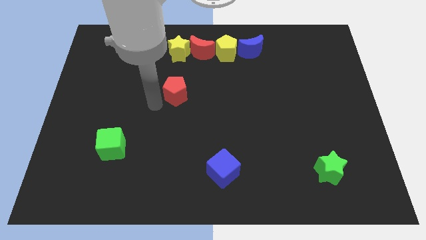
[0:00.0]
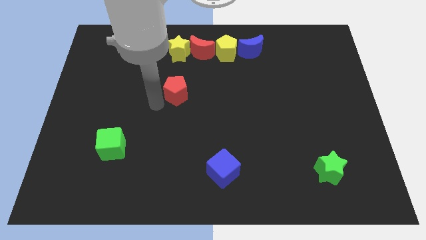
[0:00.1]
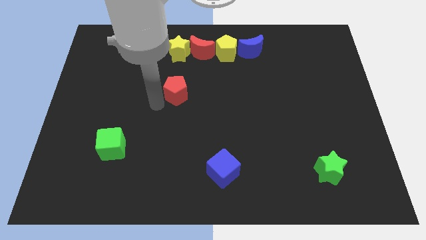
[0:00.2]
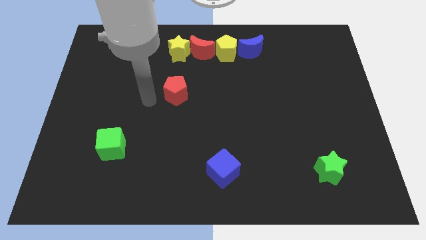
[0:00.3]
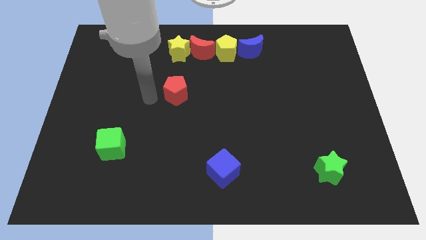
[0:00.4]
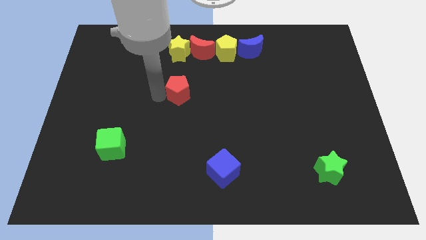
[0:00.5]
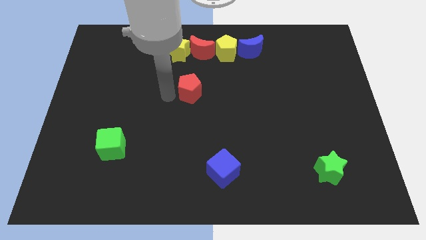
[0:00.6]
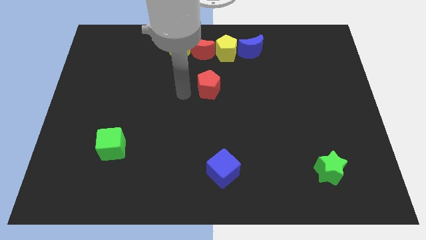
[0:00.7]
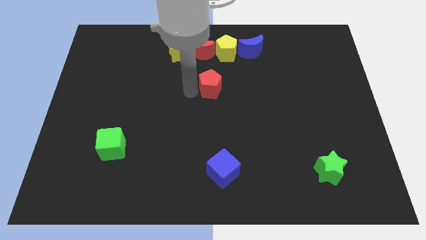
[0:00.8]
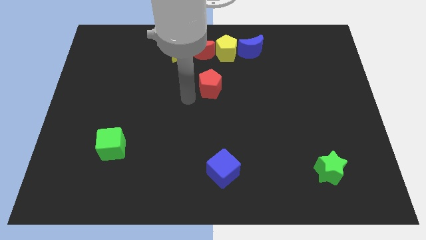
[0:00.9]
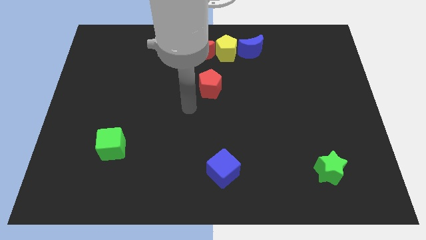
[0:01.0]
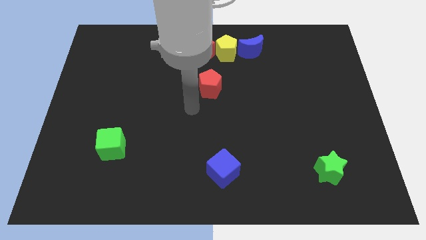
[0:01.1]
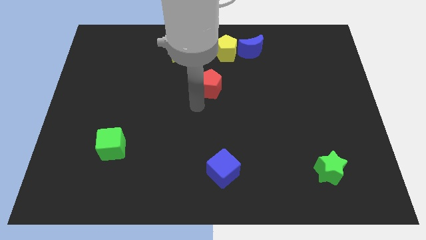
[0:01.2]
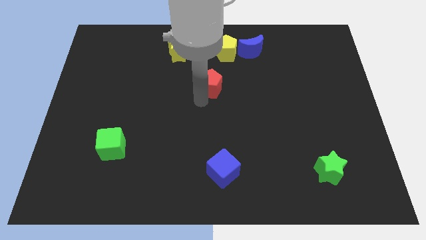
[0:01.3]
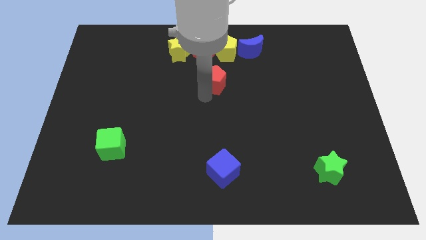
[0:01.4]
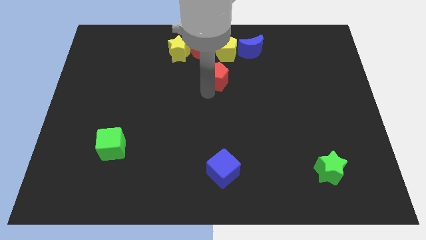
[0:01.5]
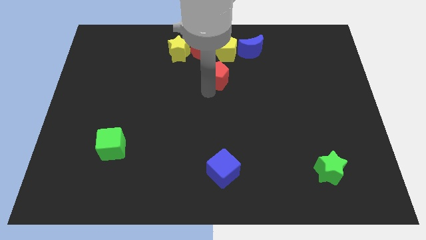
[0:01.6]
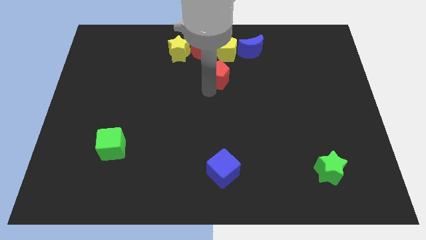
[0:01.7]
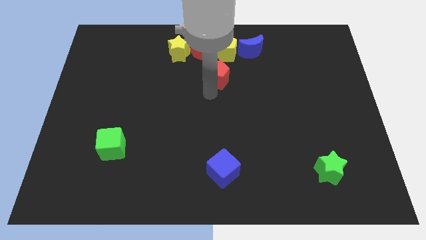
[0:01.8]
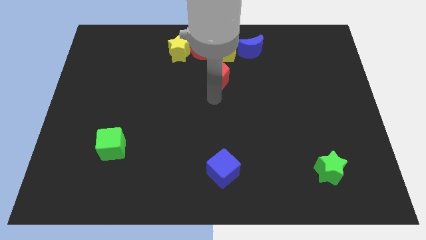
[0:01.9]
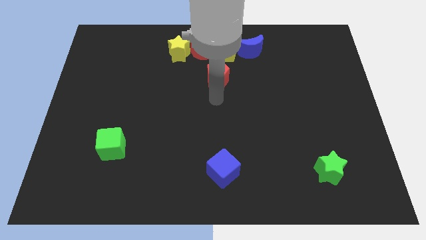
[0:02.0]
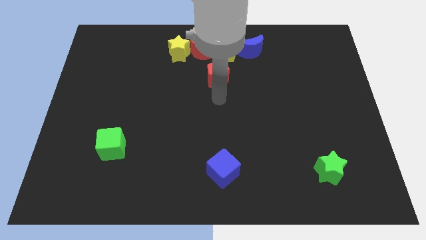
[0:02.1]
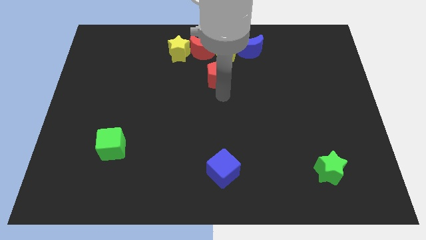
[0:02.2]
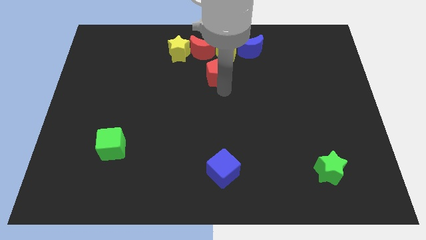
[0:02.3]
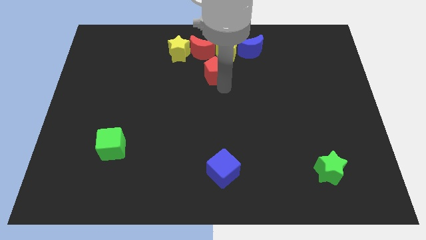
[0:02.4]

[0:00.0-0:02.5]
push the red pentagon towards up

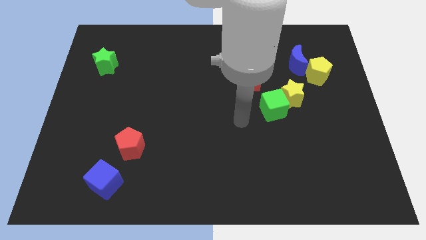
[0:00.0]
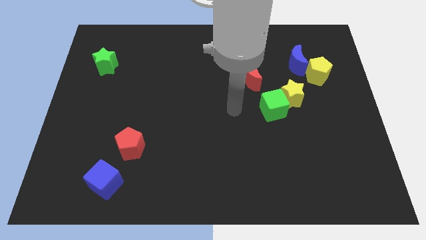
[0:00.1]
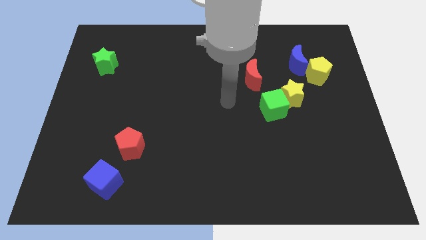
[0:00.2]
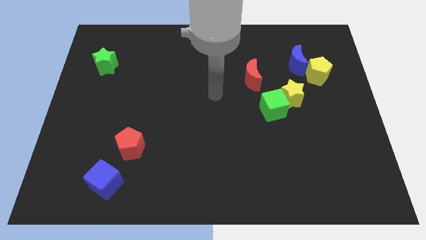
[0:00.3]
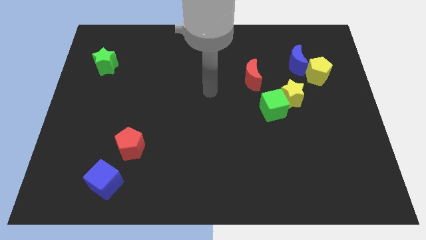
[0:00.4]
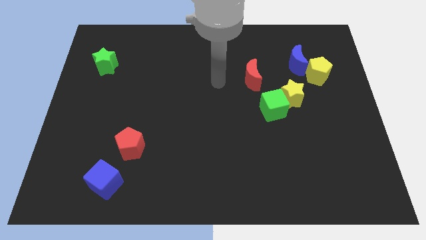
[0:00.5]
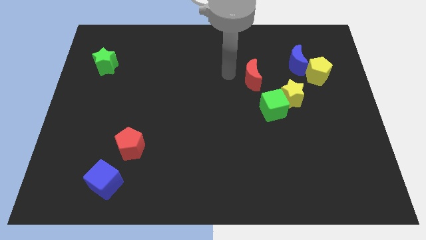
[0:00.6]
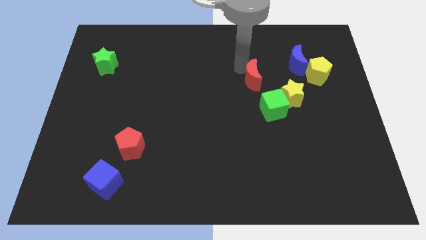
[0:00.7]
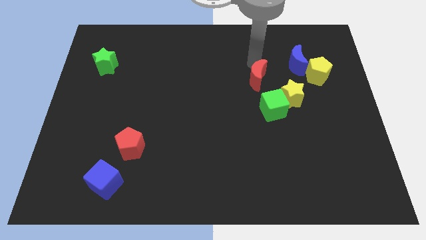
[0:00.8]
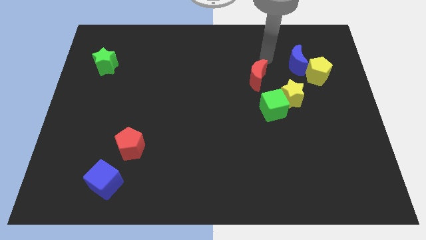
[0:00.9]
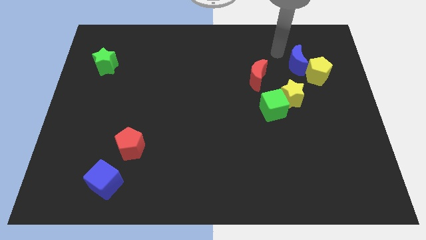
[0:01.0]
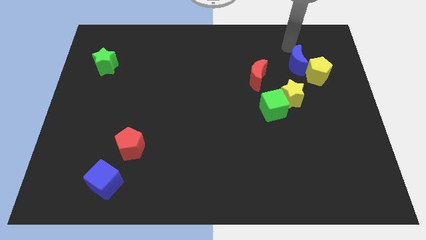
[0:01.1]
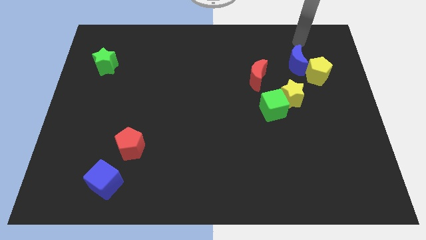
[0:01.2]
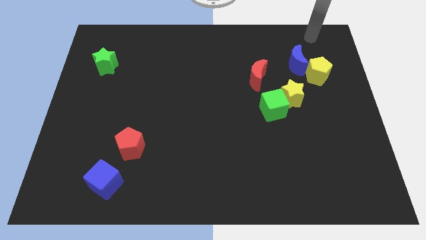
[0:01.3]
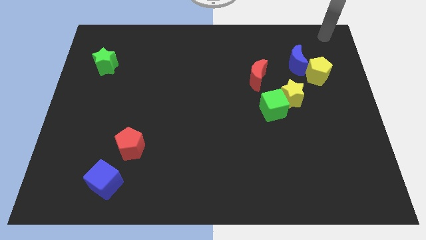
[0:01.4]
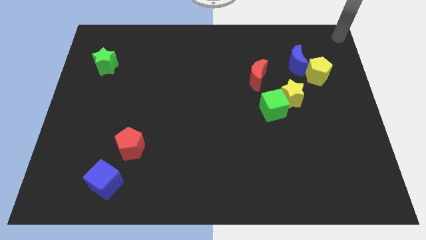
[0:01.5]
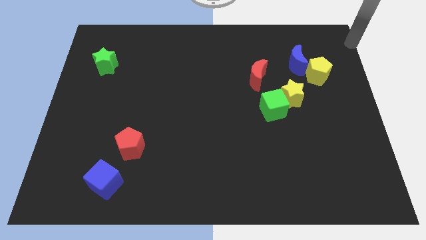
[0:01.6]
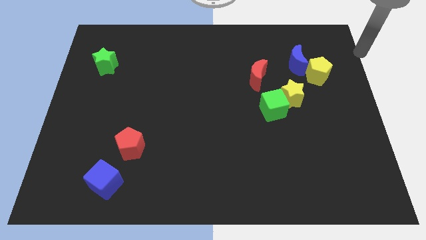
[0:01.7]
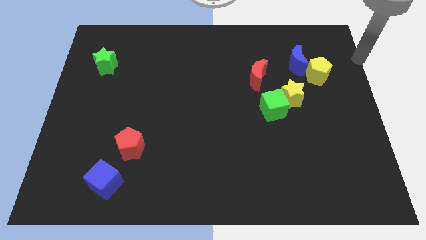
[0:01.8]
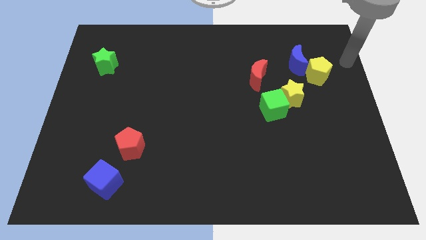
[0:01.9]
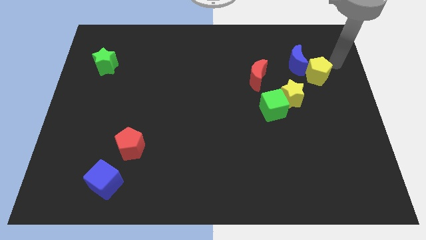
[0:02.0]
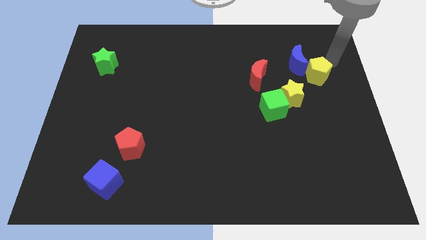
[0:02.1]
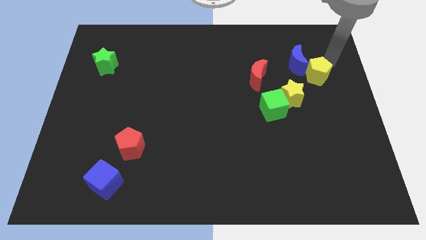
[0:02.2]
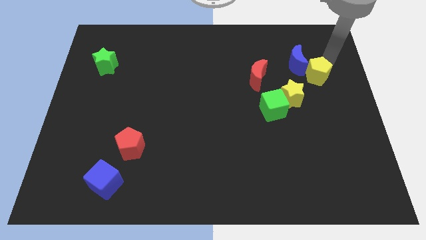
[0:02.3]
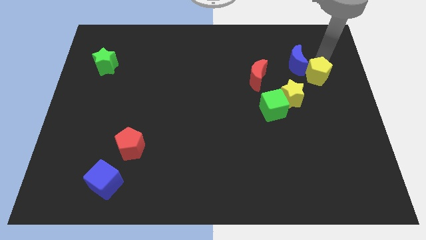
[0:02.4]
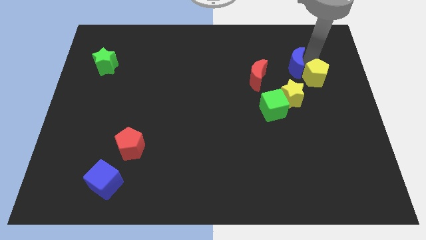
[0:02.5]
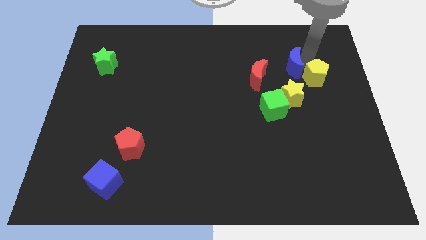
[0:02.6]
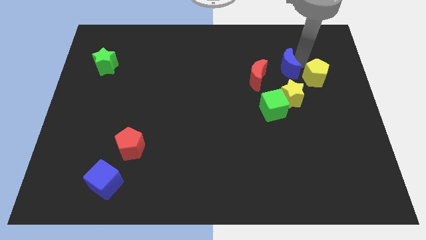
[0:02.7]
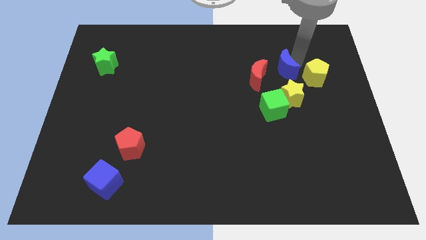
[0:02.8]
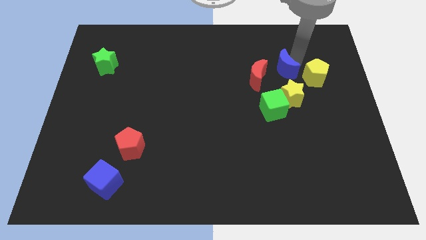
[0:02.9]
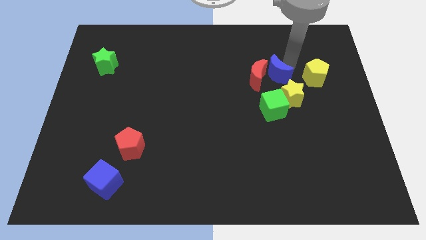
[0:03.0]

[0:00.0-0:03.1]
move blue moon towards the yellow pentagon

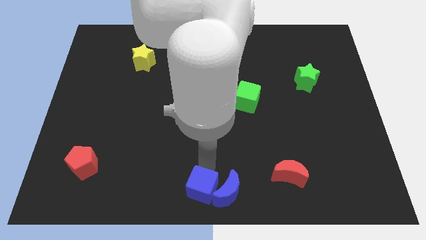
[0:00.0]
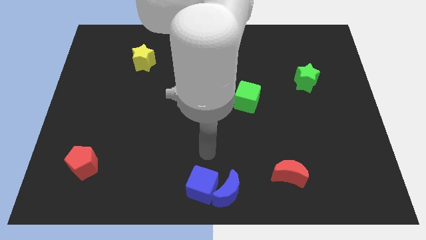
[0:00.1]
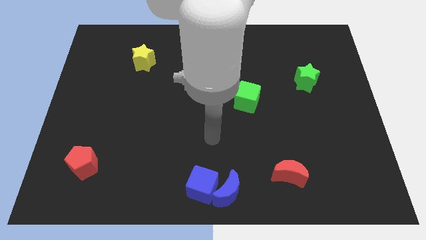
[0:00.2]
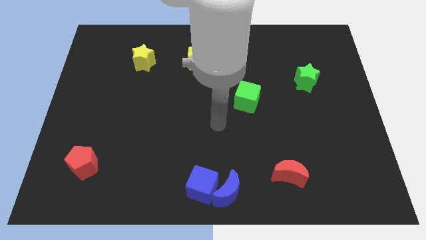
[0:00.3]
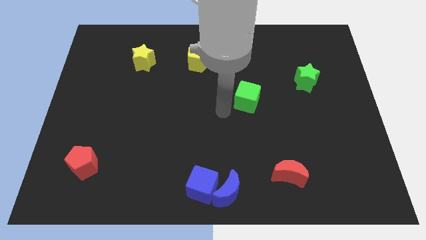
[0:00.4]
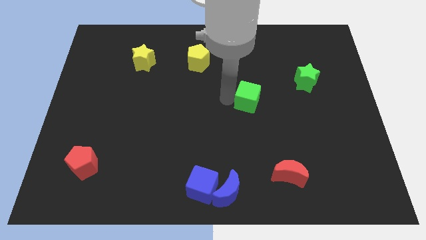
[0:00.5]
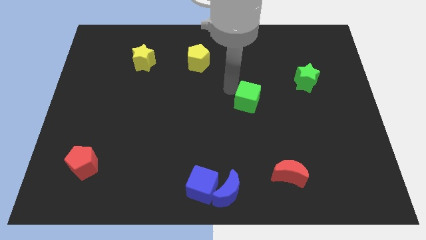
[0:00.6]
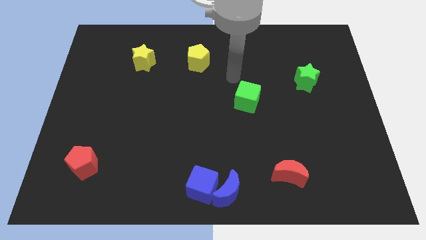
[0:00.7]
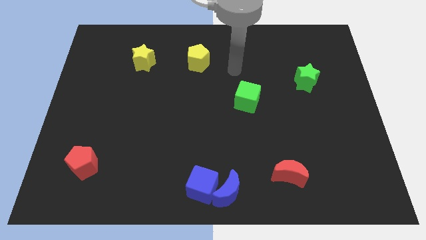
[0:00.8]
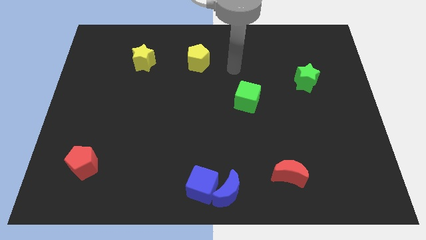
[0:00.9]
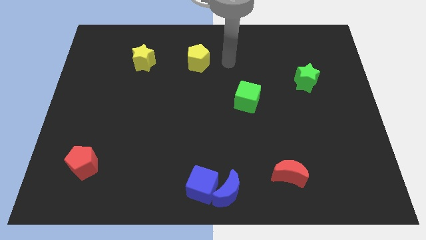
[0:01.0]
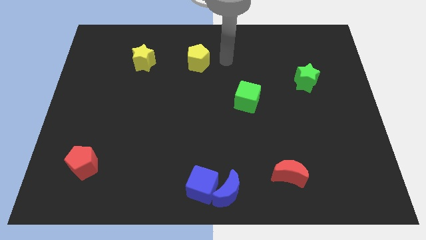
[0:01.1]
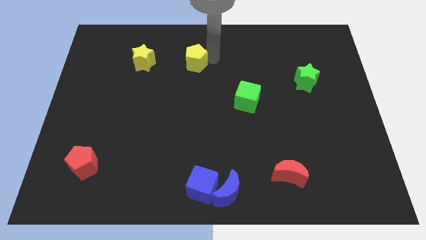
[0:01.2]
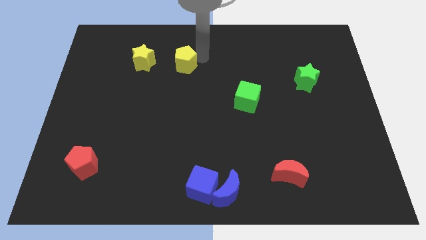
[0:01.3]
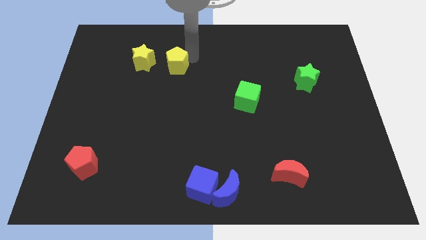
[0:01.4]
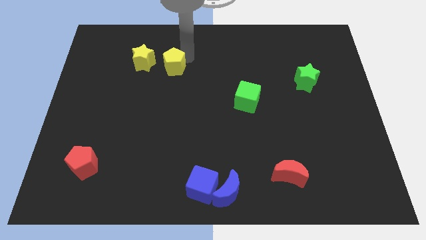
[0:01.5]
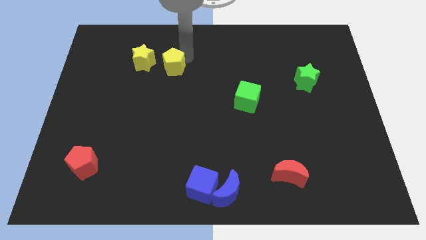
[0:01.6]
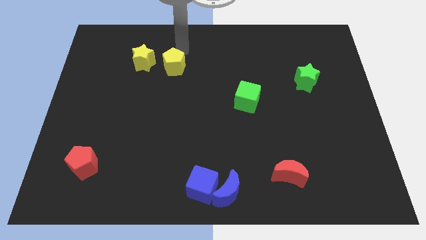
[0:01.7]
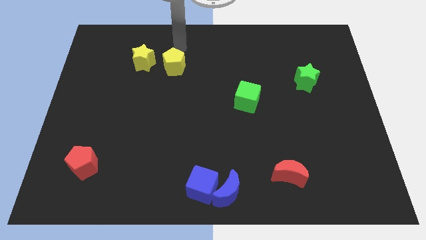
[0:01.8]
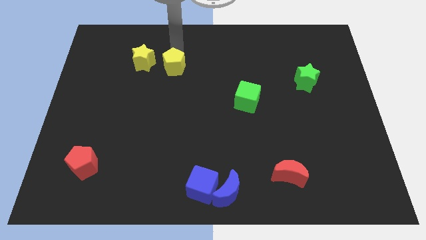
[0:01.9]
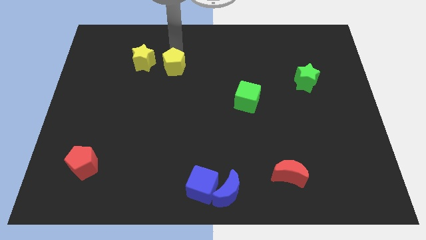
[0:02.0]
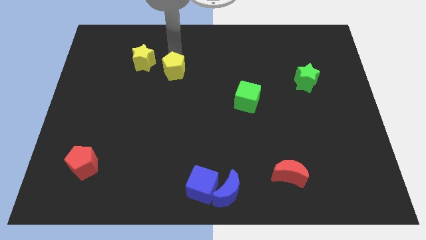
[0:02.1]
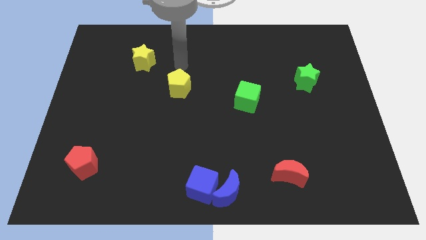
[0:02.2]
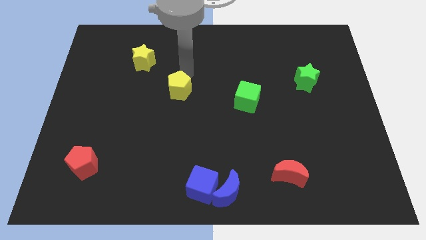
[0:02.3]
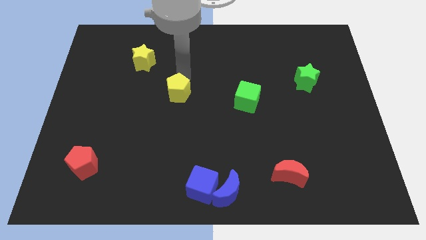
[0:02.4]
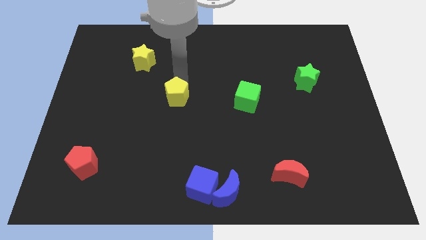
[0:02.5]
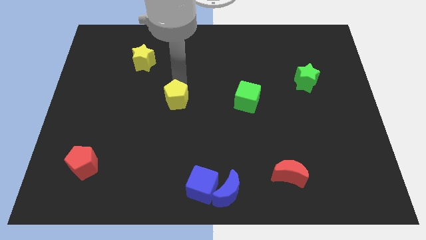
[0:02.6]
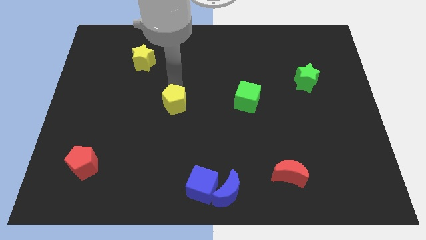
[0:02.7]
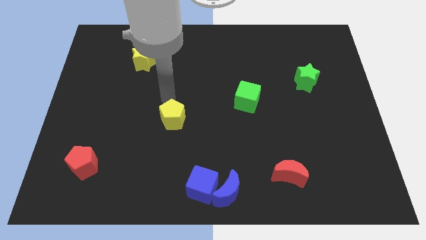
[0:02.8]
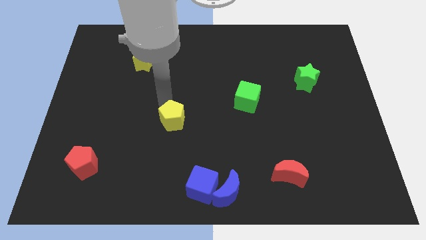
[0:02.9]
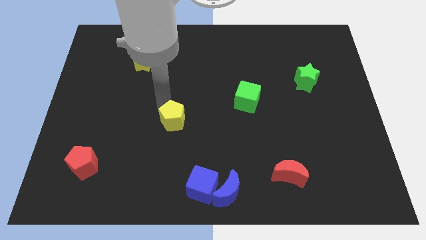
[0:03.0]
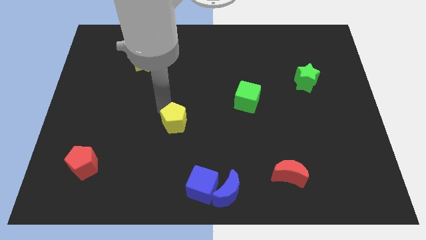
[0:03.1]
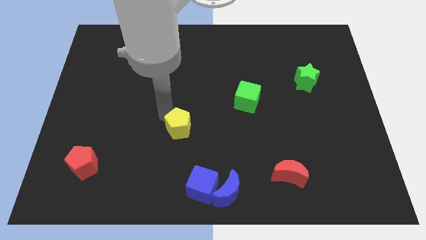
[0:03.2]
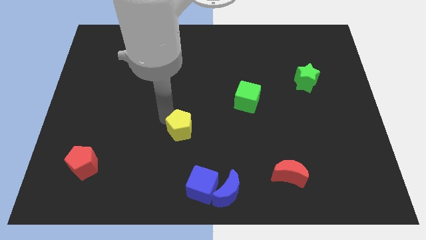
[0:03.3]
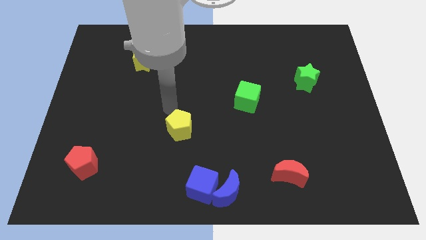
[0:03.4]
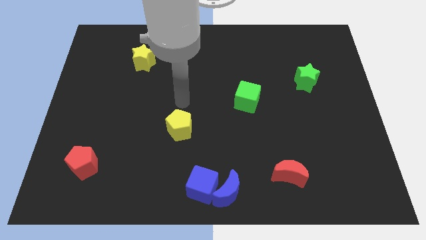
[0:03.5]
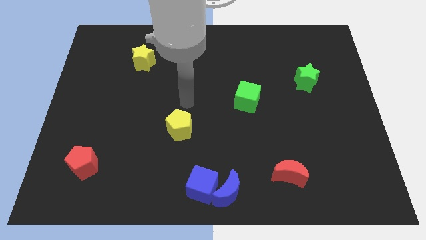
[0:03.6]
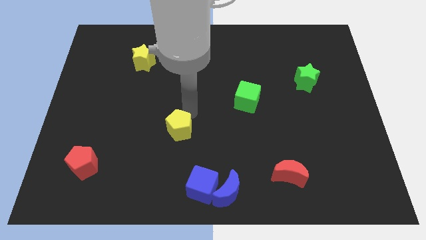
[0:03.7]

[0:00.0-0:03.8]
place the yellow pentagon in between the green cube and red pentagon
